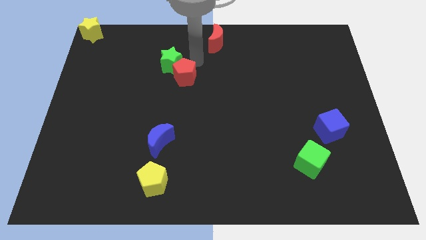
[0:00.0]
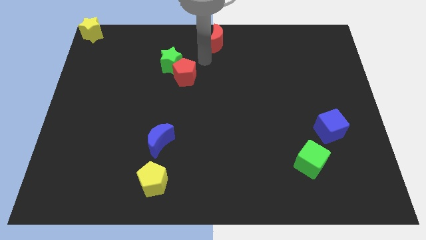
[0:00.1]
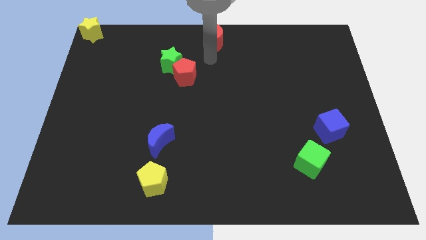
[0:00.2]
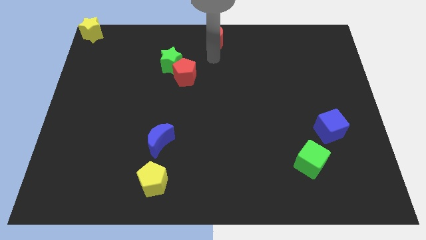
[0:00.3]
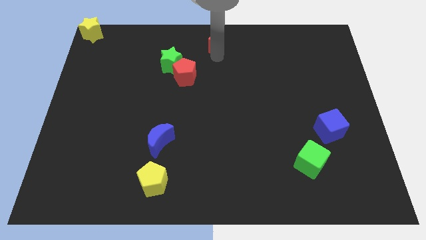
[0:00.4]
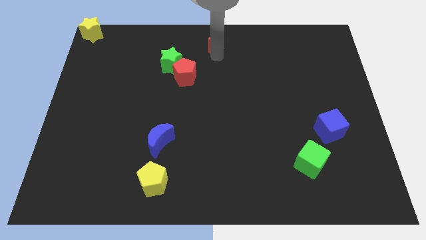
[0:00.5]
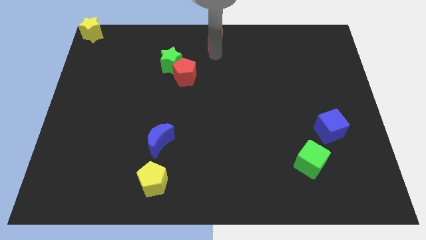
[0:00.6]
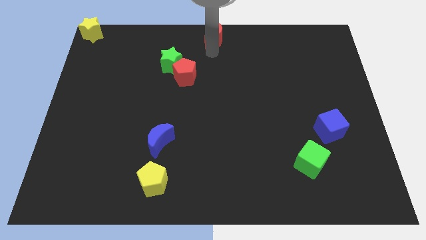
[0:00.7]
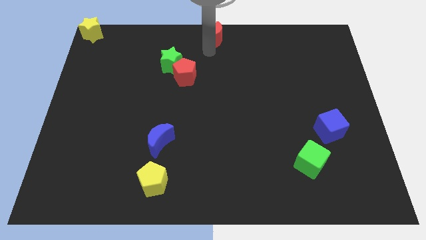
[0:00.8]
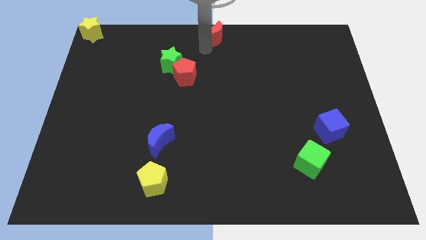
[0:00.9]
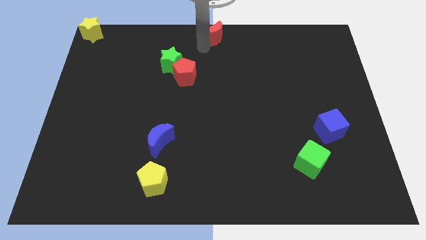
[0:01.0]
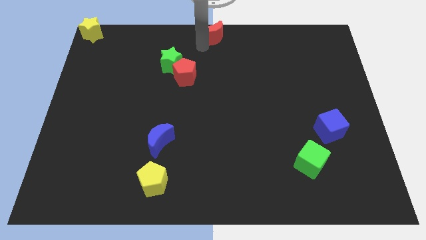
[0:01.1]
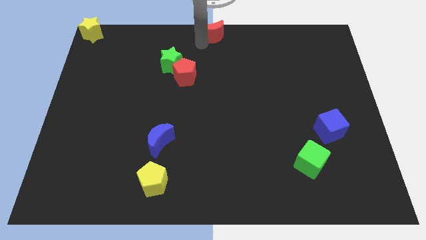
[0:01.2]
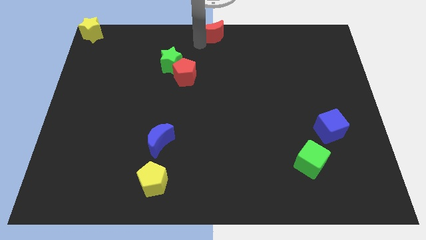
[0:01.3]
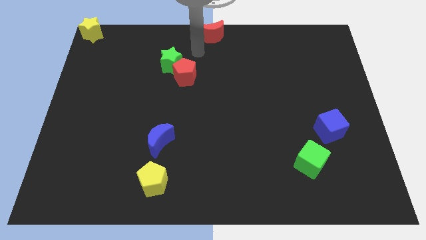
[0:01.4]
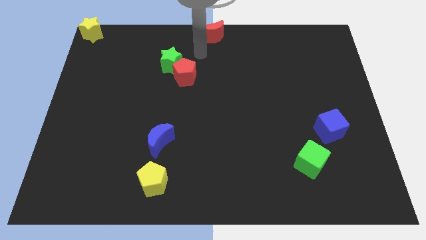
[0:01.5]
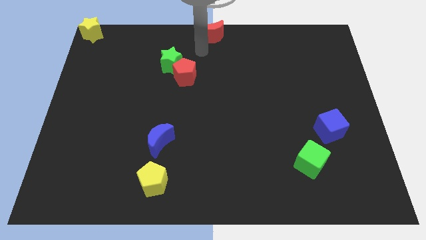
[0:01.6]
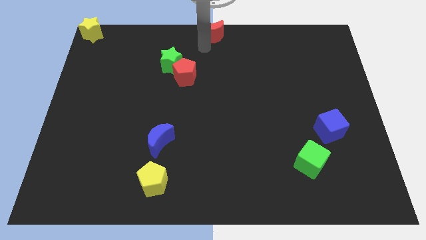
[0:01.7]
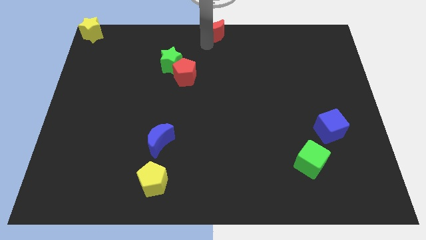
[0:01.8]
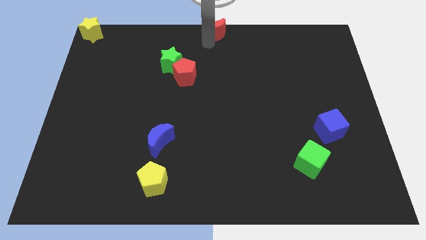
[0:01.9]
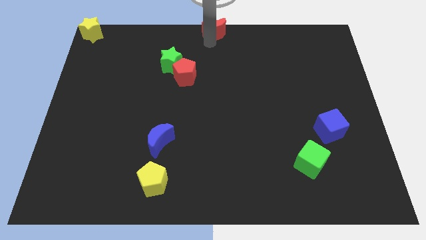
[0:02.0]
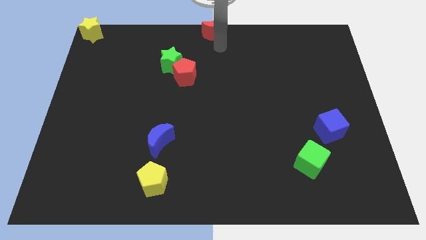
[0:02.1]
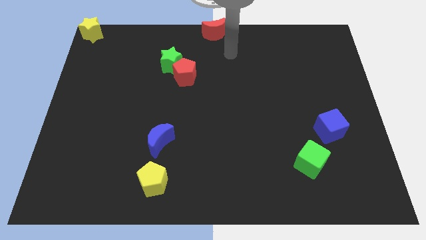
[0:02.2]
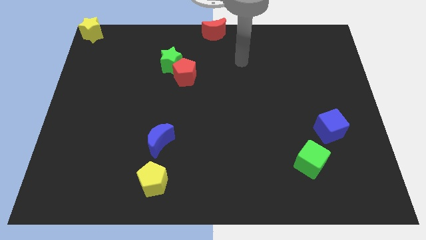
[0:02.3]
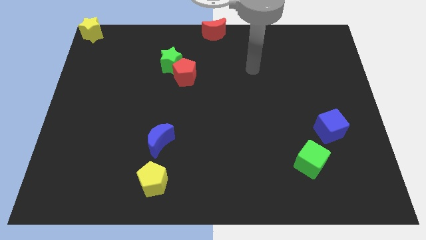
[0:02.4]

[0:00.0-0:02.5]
place the red crescent at top center of the board

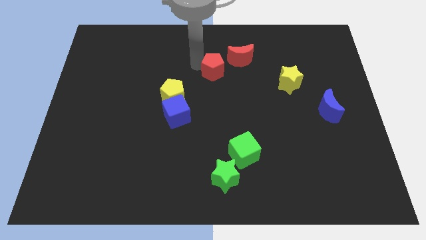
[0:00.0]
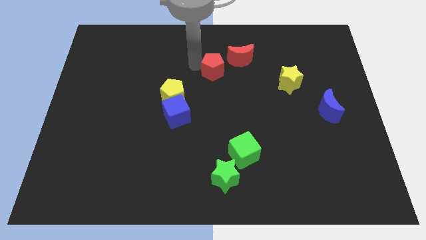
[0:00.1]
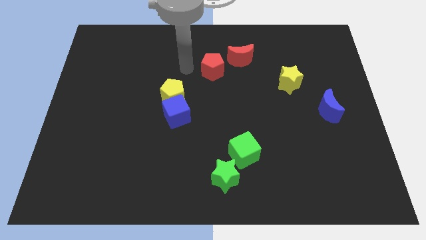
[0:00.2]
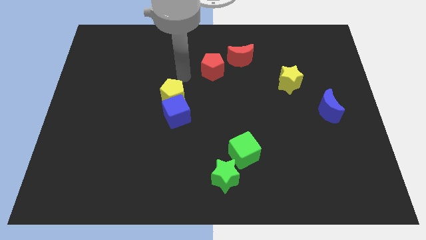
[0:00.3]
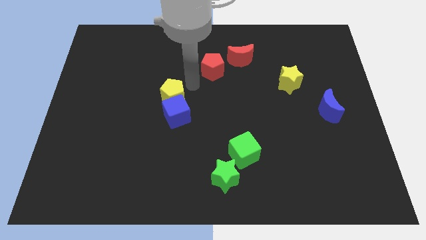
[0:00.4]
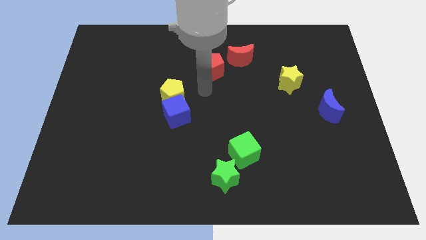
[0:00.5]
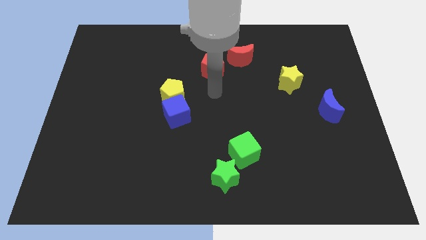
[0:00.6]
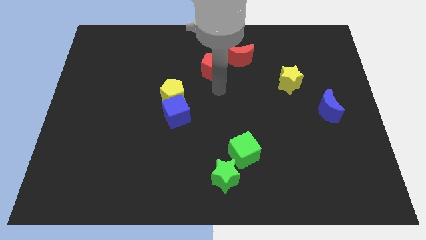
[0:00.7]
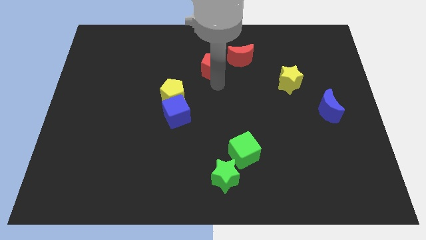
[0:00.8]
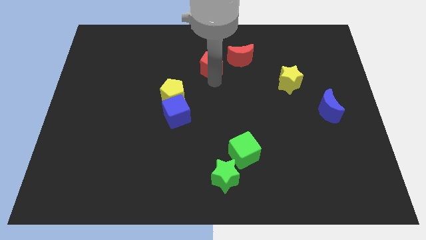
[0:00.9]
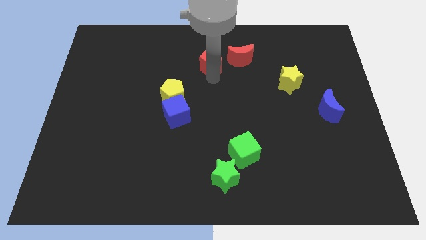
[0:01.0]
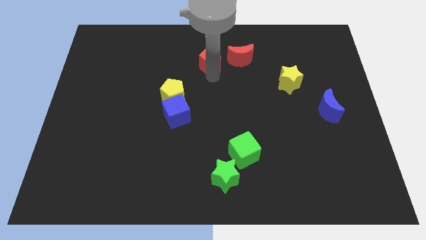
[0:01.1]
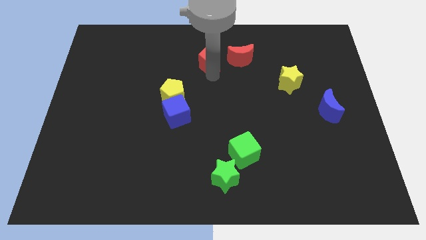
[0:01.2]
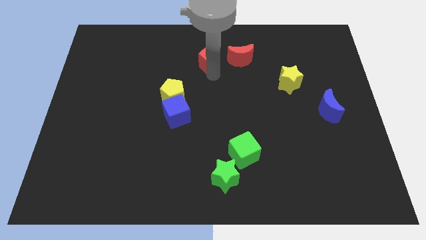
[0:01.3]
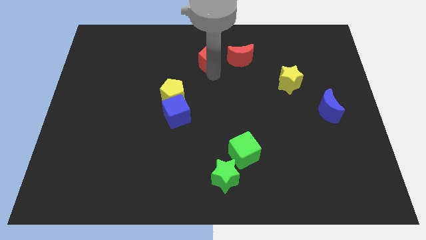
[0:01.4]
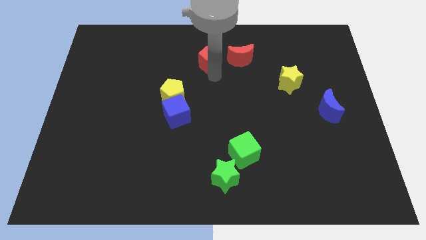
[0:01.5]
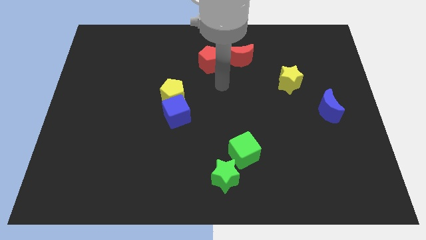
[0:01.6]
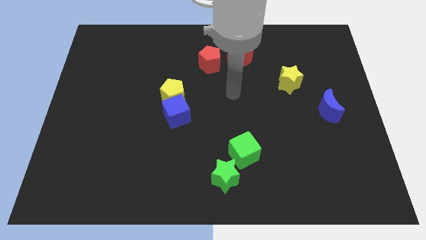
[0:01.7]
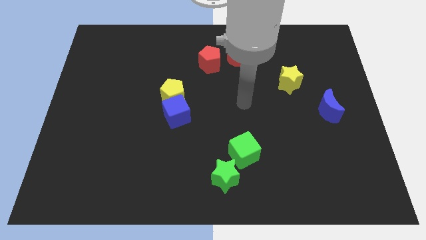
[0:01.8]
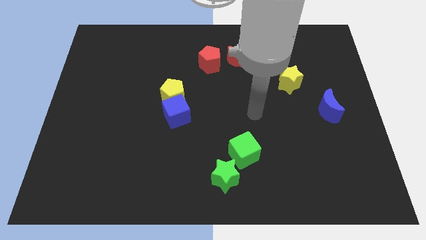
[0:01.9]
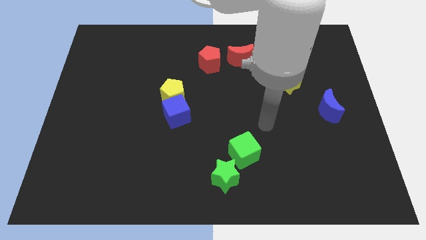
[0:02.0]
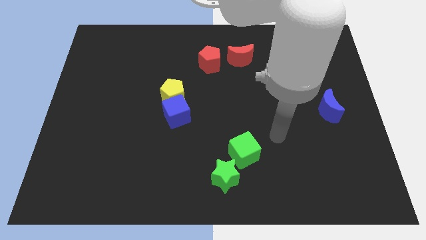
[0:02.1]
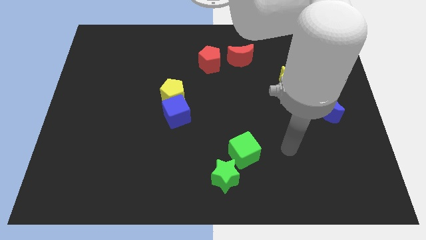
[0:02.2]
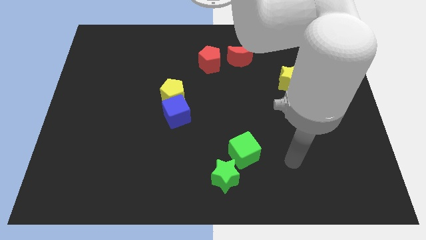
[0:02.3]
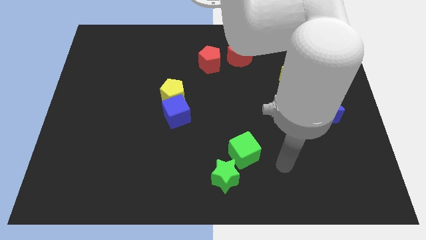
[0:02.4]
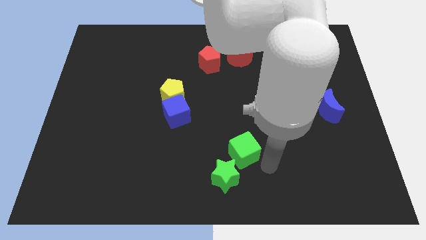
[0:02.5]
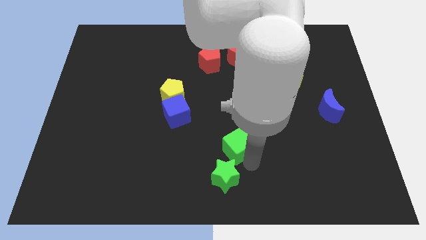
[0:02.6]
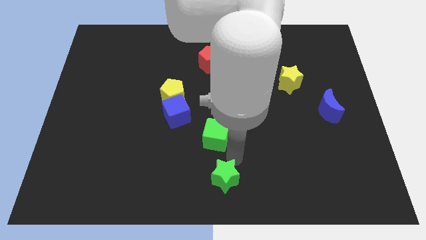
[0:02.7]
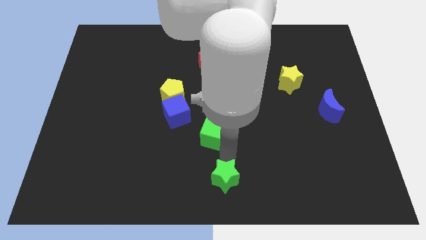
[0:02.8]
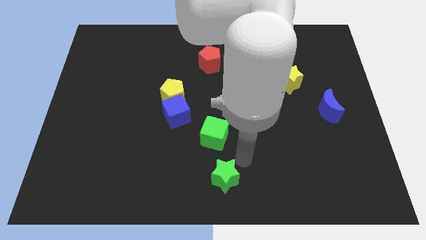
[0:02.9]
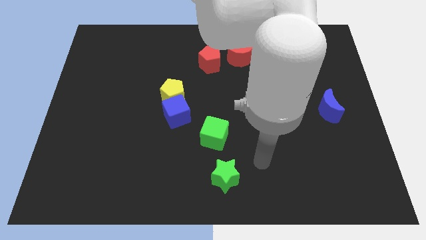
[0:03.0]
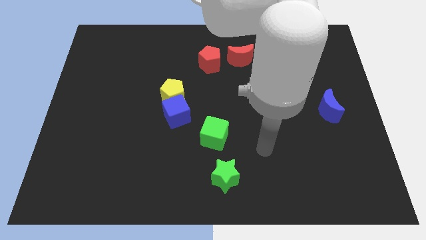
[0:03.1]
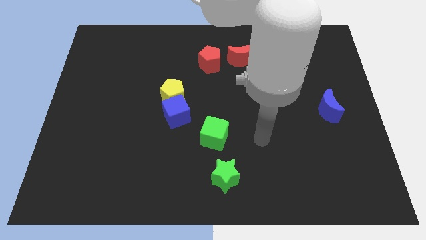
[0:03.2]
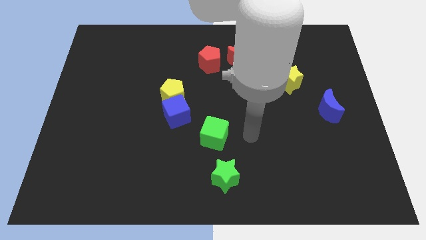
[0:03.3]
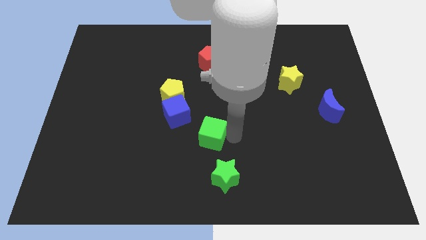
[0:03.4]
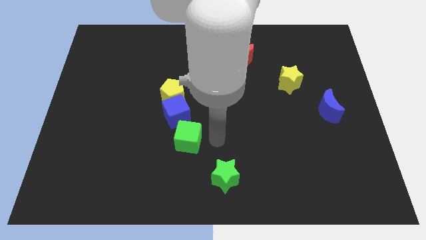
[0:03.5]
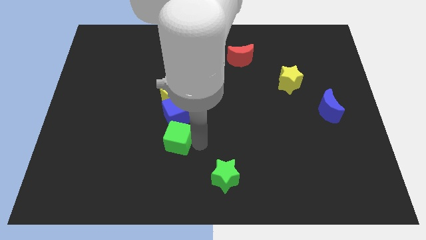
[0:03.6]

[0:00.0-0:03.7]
place the green cube below the blue cube

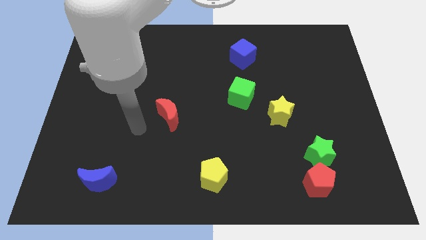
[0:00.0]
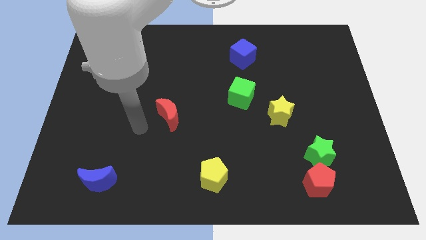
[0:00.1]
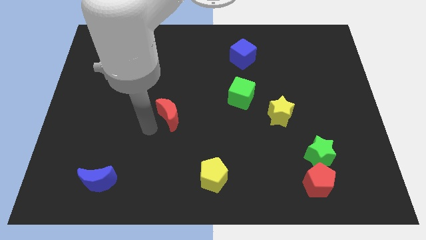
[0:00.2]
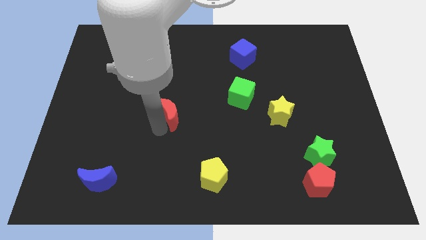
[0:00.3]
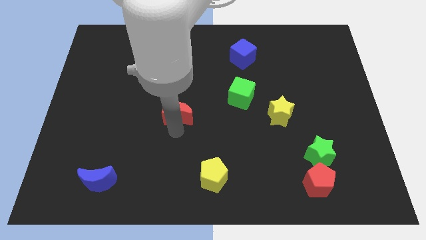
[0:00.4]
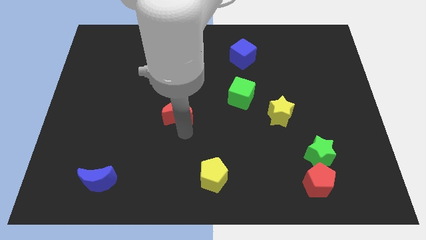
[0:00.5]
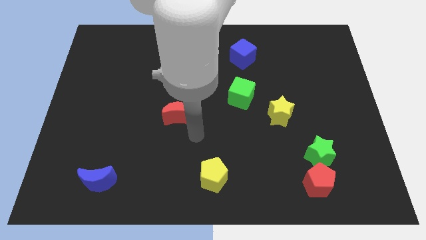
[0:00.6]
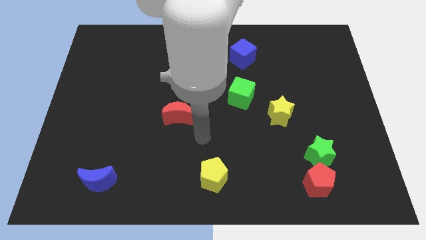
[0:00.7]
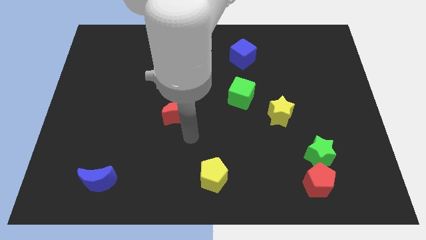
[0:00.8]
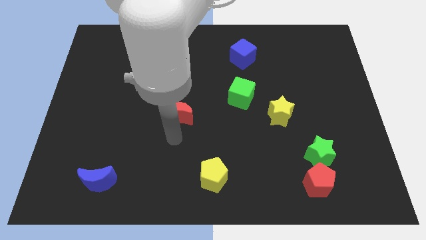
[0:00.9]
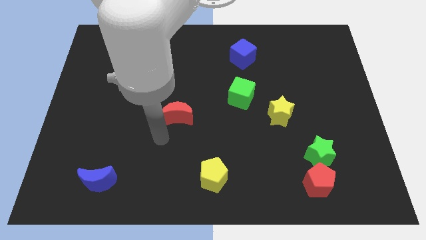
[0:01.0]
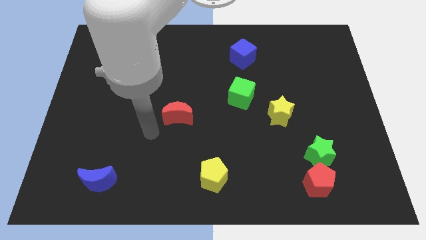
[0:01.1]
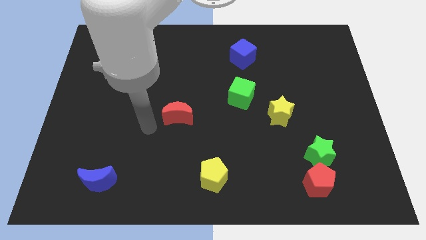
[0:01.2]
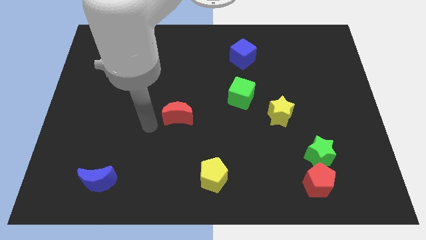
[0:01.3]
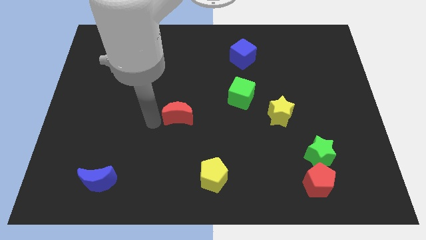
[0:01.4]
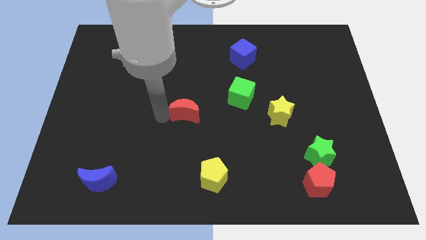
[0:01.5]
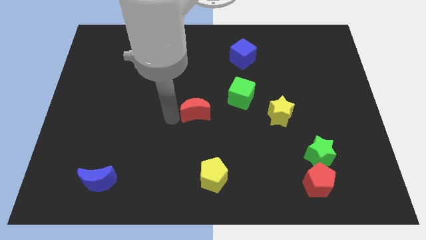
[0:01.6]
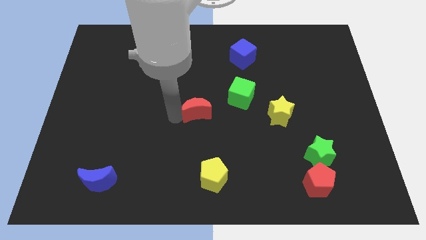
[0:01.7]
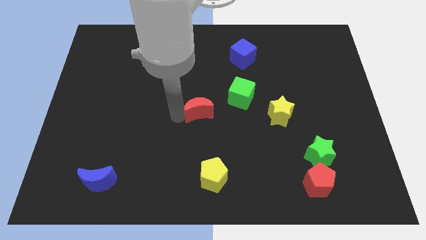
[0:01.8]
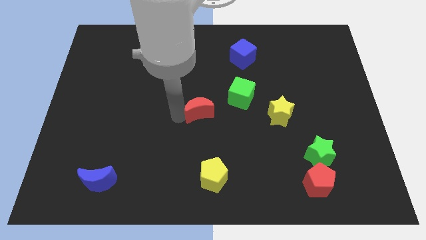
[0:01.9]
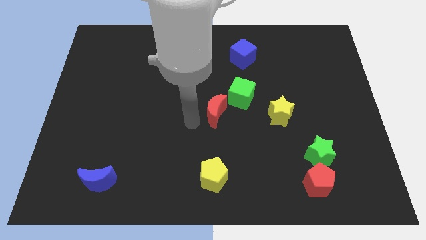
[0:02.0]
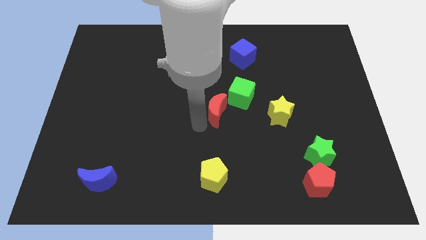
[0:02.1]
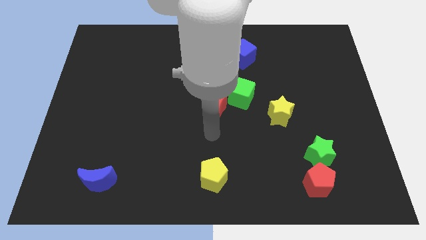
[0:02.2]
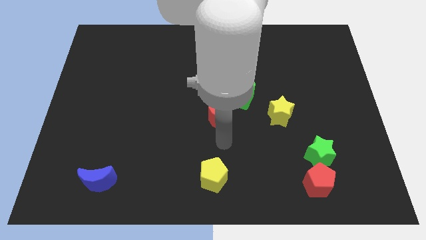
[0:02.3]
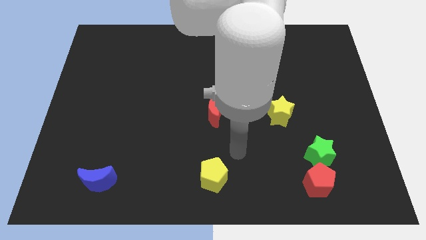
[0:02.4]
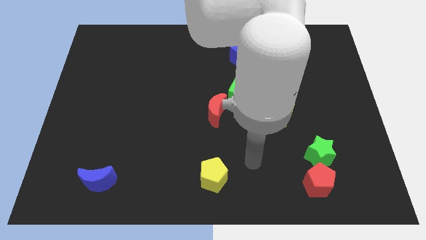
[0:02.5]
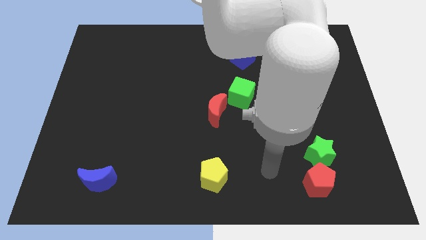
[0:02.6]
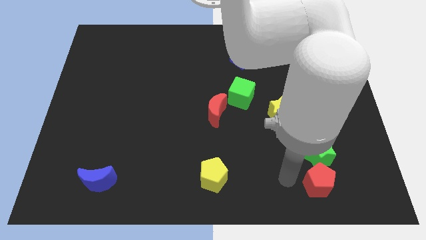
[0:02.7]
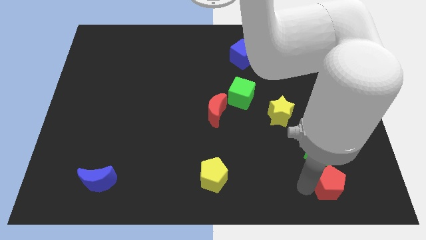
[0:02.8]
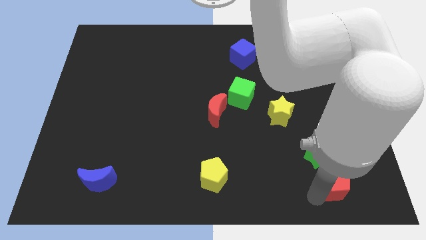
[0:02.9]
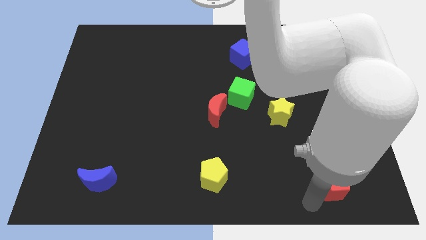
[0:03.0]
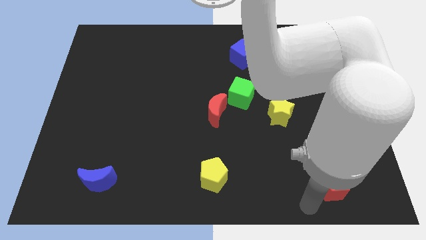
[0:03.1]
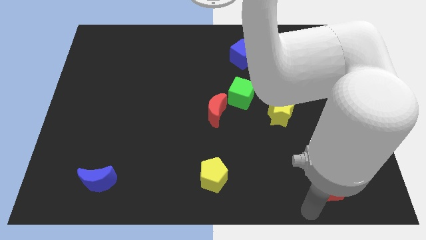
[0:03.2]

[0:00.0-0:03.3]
move the red moon above the yellow pentagon
